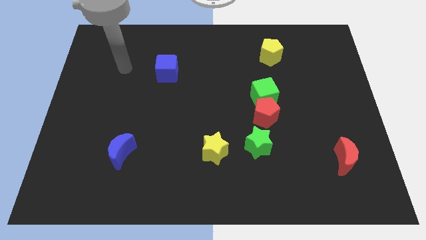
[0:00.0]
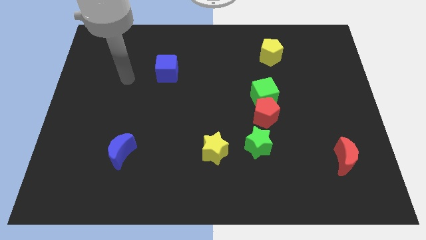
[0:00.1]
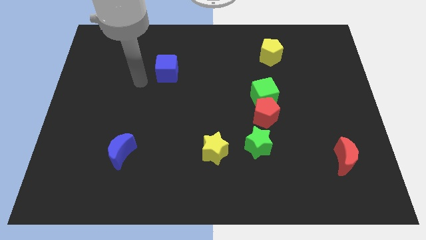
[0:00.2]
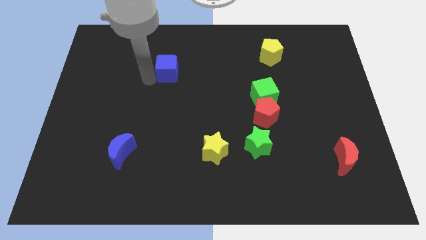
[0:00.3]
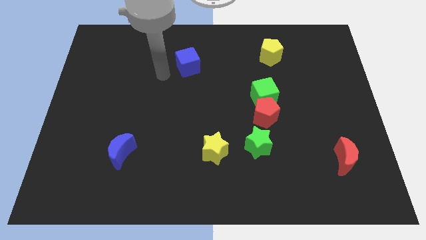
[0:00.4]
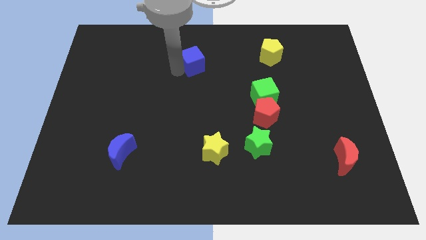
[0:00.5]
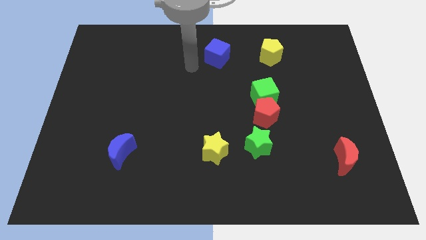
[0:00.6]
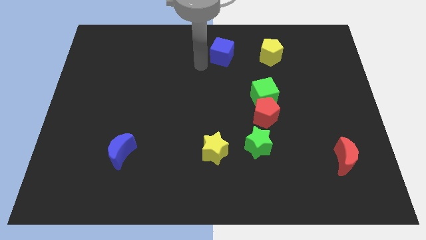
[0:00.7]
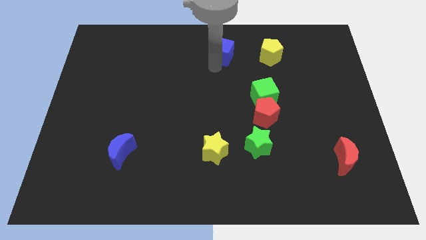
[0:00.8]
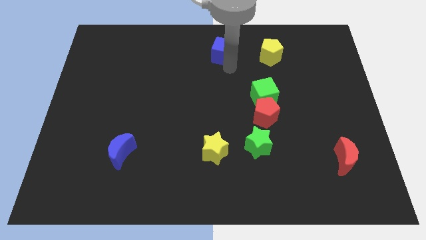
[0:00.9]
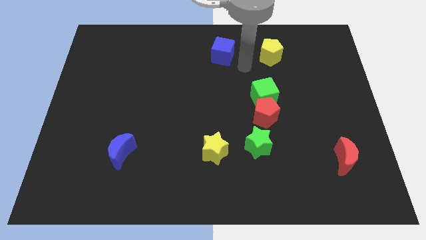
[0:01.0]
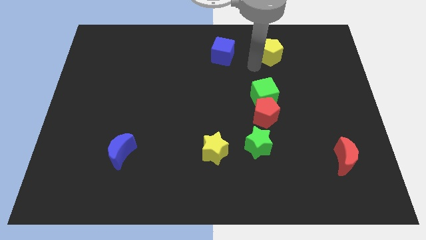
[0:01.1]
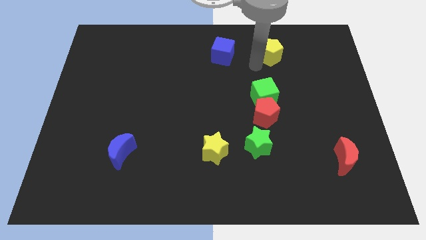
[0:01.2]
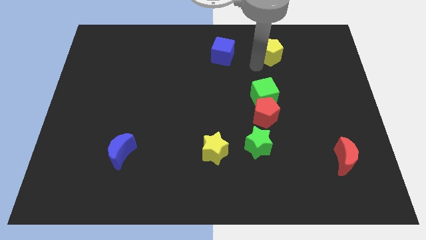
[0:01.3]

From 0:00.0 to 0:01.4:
place the blue cube to the left of the yellow pentagon

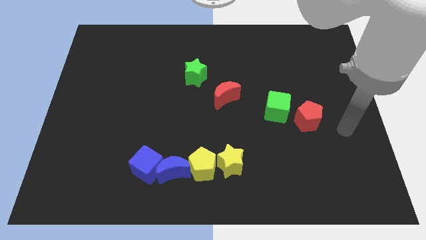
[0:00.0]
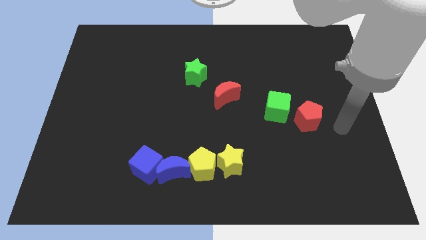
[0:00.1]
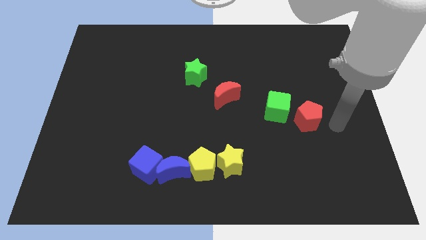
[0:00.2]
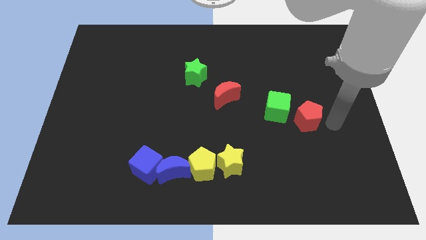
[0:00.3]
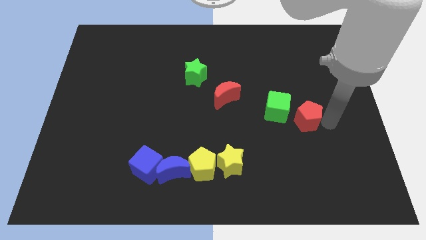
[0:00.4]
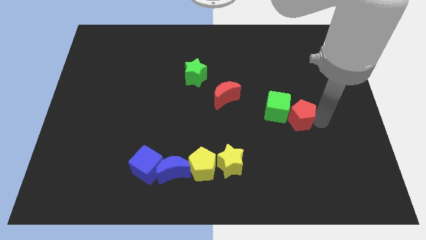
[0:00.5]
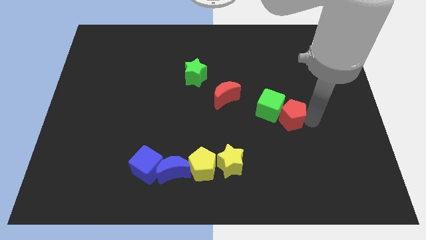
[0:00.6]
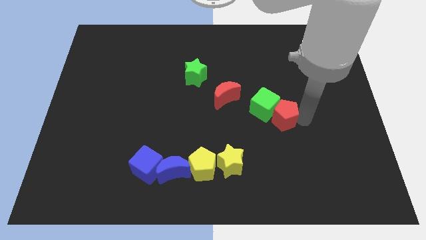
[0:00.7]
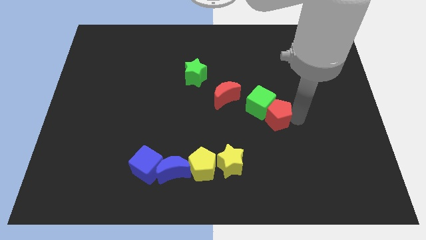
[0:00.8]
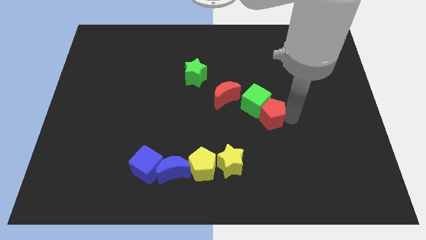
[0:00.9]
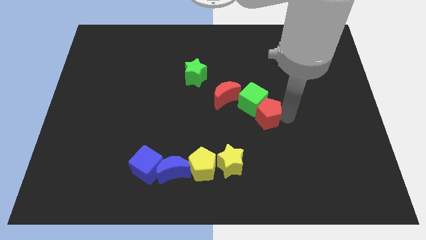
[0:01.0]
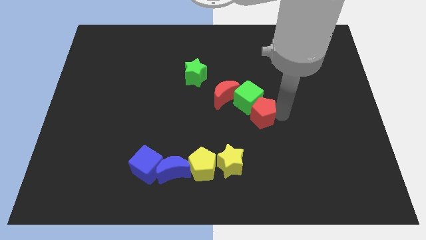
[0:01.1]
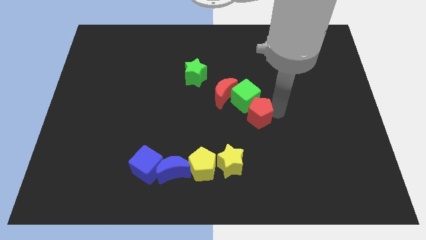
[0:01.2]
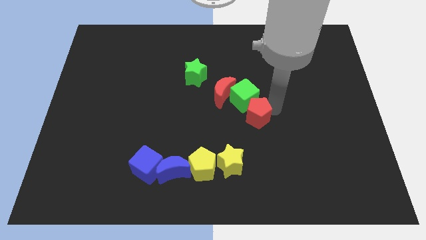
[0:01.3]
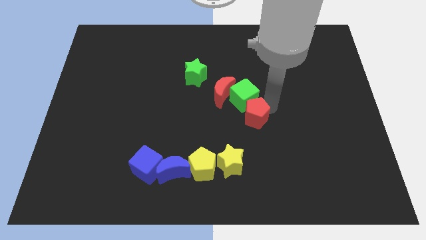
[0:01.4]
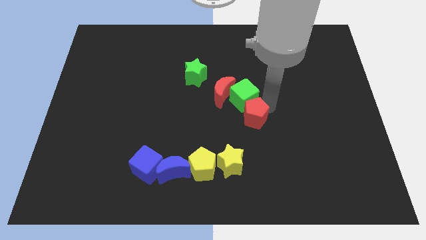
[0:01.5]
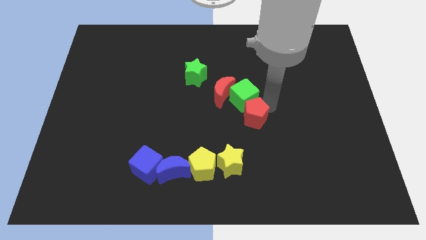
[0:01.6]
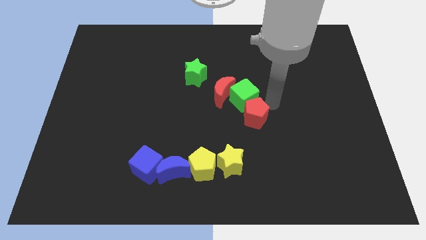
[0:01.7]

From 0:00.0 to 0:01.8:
push the green cube with red pentagon into the right side of the red moon

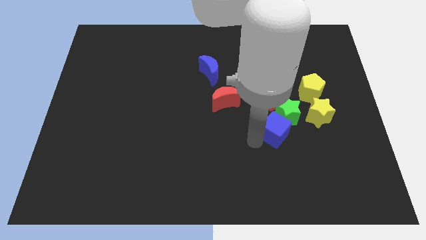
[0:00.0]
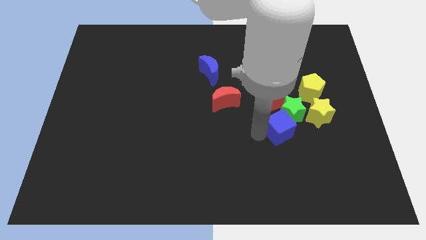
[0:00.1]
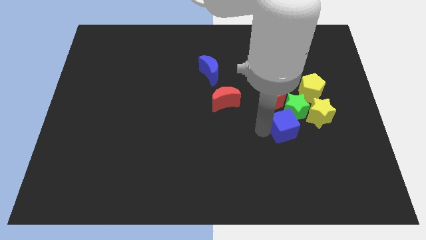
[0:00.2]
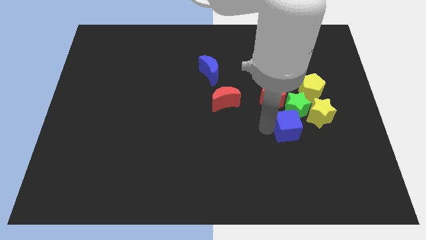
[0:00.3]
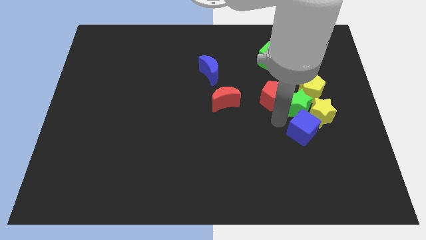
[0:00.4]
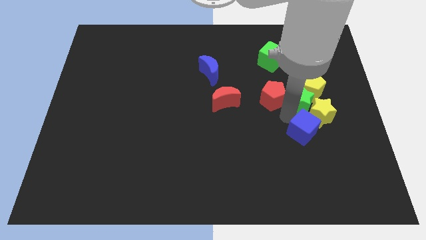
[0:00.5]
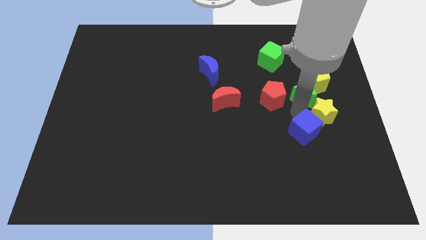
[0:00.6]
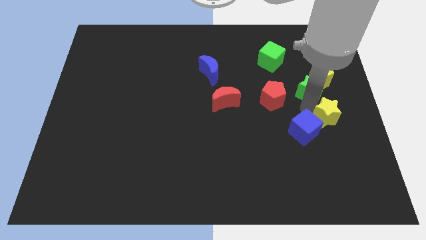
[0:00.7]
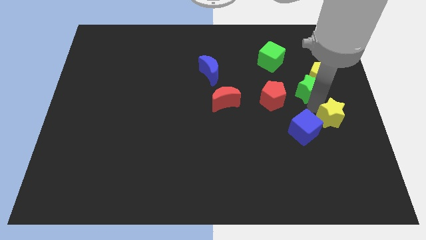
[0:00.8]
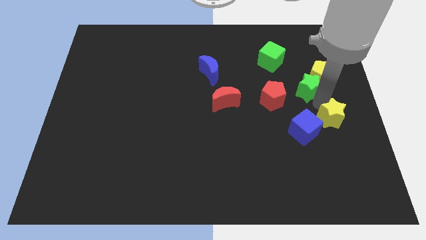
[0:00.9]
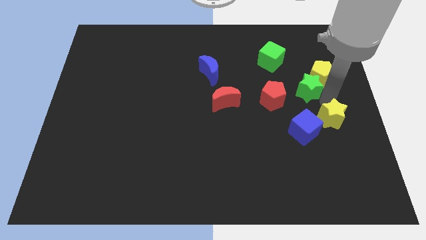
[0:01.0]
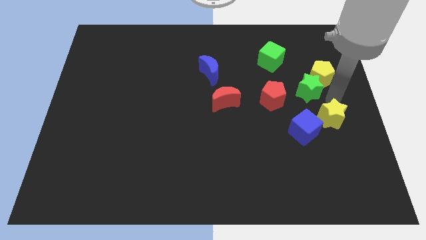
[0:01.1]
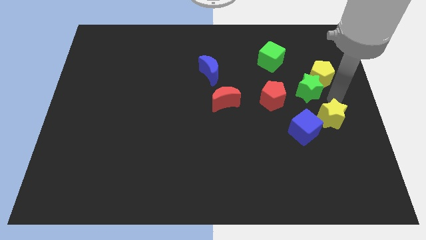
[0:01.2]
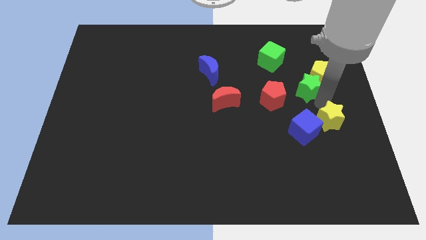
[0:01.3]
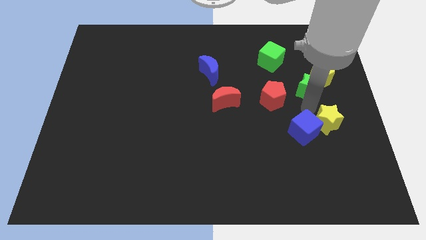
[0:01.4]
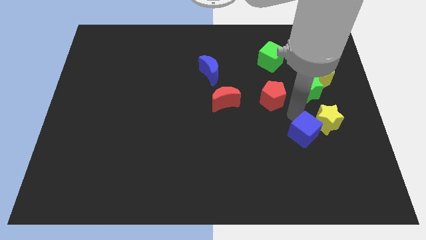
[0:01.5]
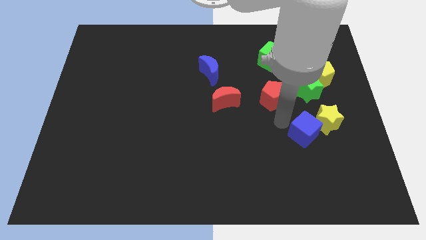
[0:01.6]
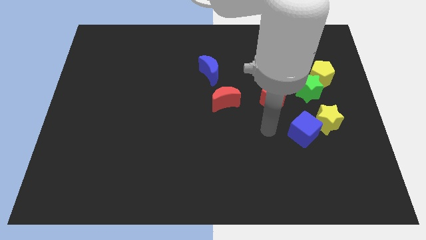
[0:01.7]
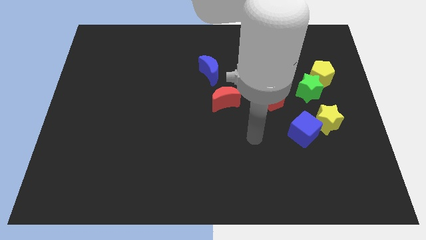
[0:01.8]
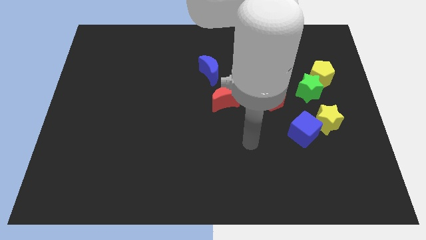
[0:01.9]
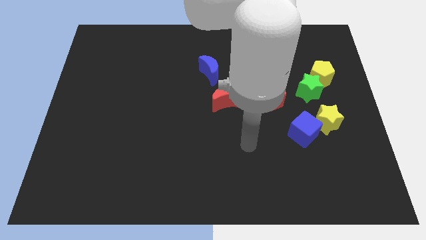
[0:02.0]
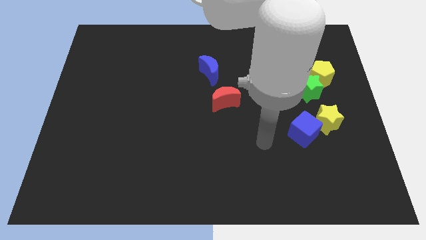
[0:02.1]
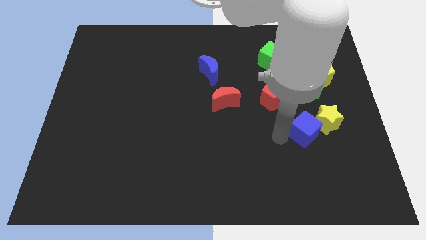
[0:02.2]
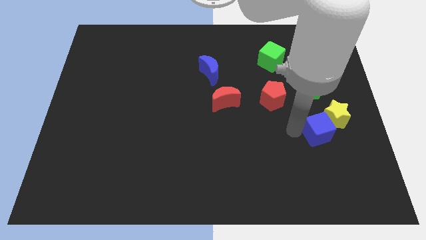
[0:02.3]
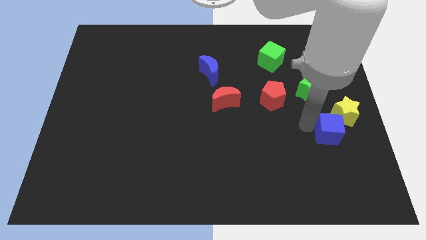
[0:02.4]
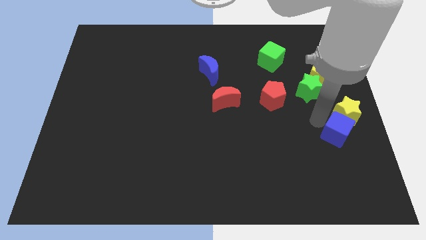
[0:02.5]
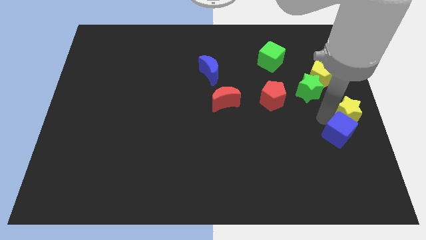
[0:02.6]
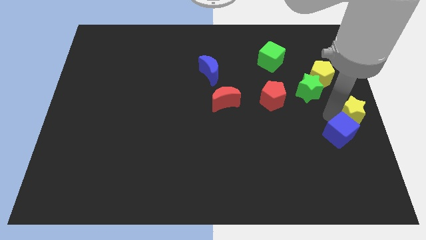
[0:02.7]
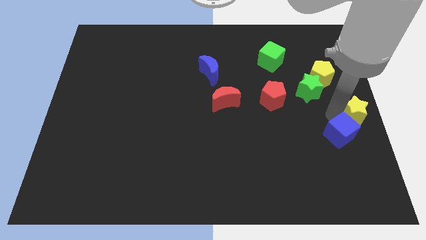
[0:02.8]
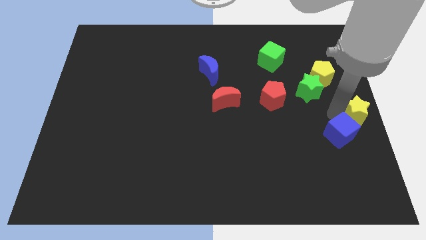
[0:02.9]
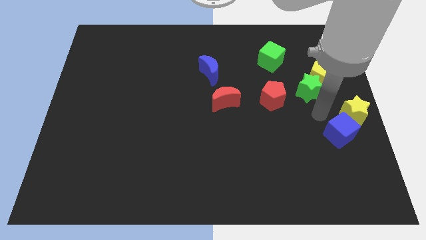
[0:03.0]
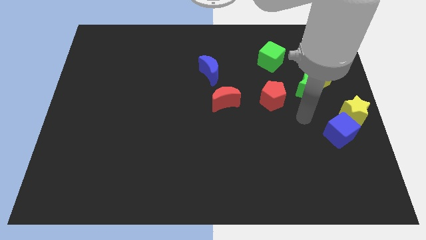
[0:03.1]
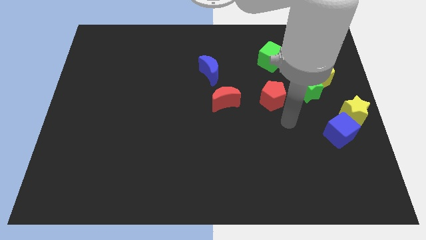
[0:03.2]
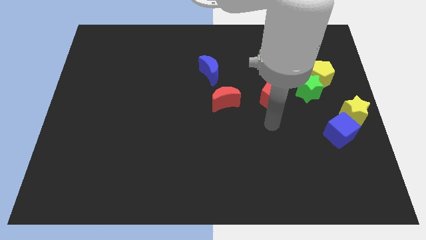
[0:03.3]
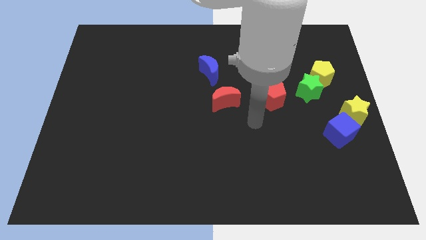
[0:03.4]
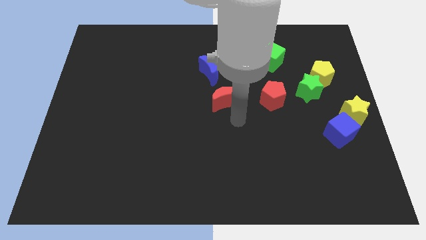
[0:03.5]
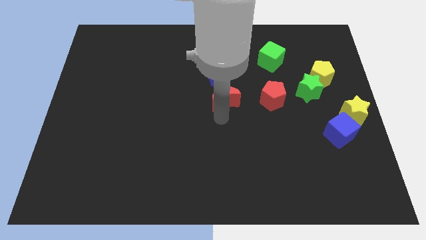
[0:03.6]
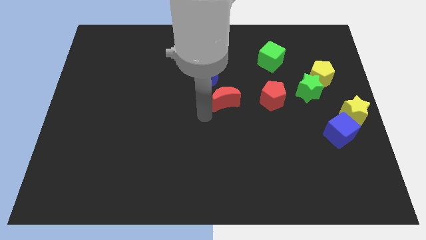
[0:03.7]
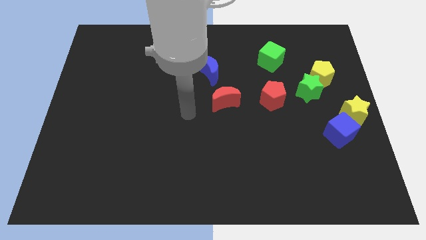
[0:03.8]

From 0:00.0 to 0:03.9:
separate the yellow star blue cube green star and the yellow pentagon

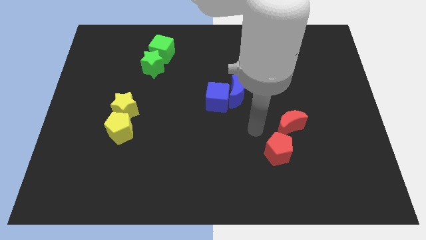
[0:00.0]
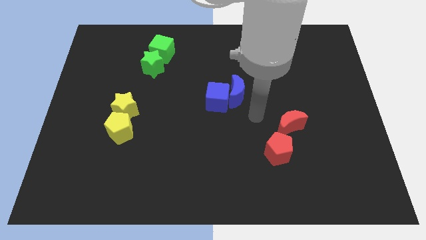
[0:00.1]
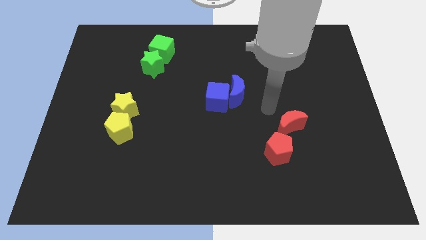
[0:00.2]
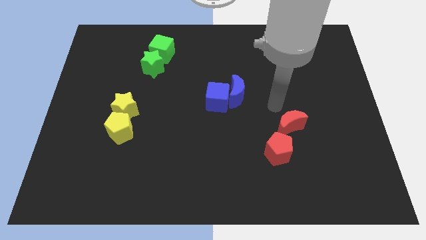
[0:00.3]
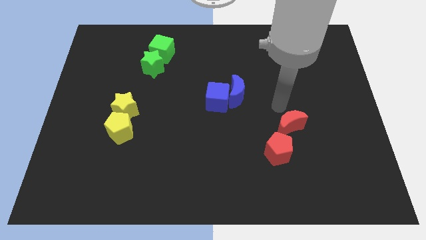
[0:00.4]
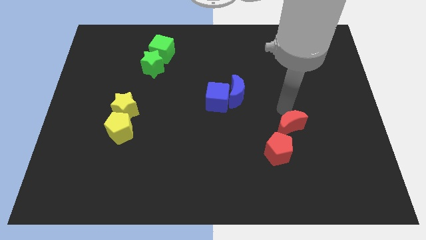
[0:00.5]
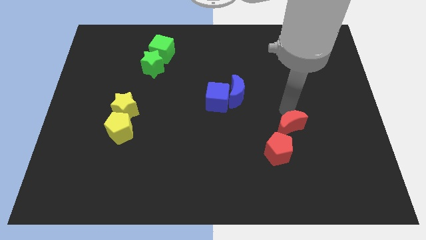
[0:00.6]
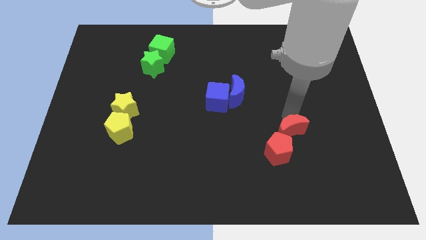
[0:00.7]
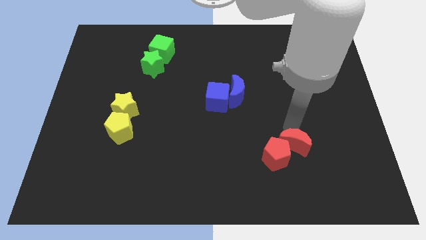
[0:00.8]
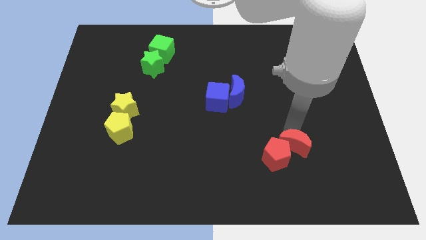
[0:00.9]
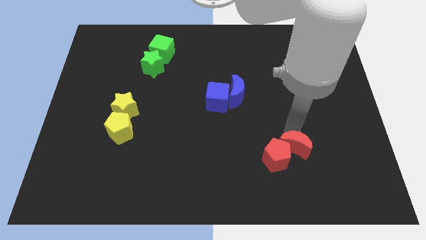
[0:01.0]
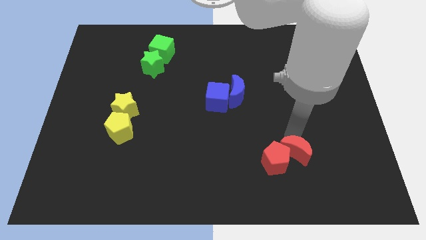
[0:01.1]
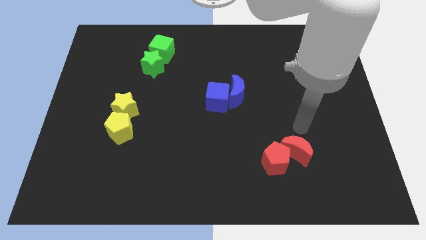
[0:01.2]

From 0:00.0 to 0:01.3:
move the red crescent to the right of the red pentagon

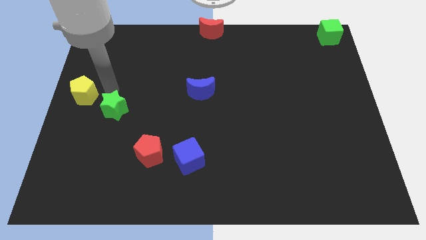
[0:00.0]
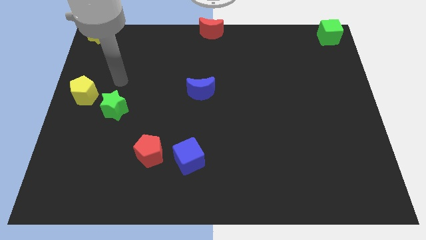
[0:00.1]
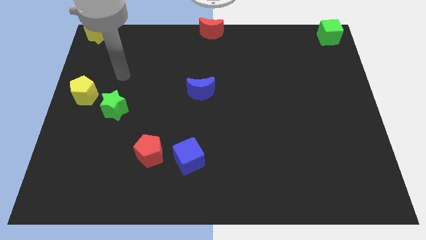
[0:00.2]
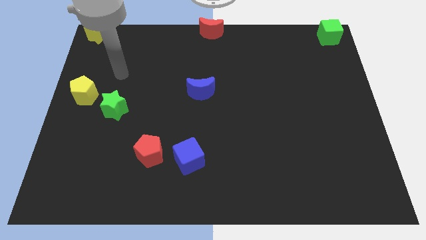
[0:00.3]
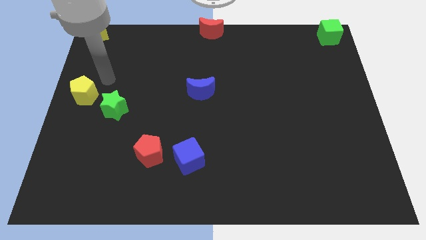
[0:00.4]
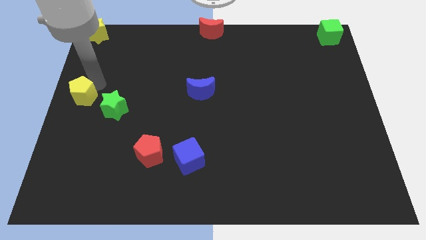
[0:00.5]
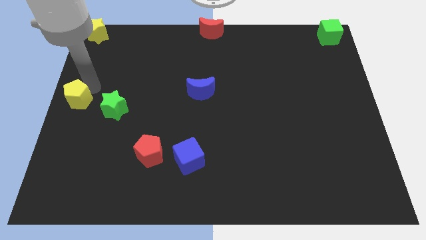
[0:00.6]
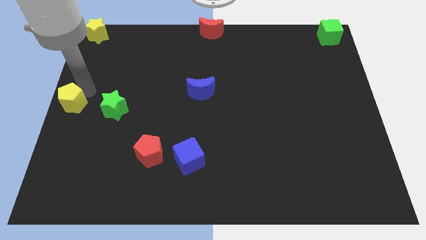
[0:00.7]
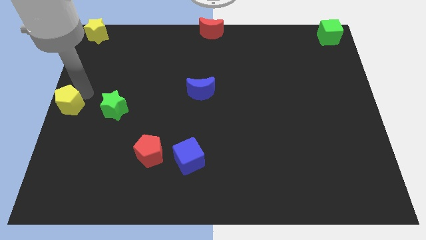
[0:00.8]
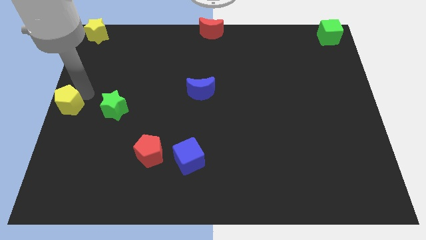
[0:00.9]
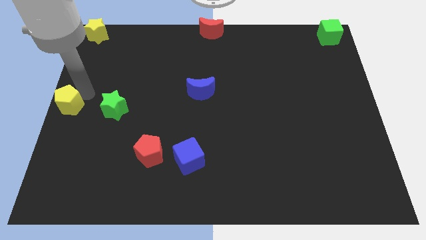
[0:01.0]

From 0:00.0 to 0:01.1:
move the yellow pentagon towards the center left of the board
